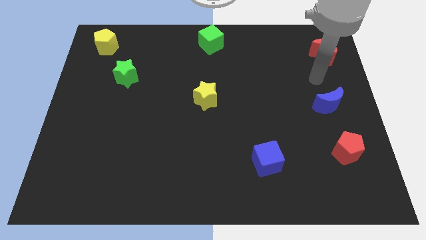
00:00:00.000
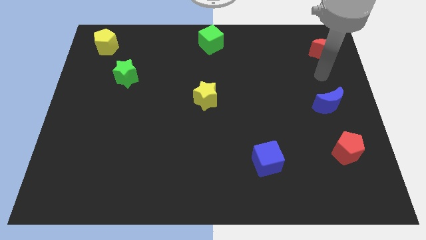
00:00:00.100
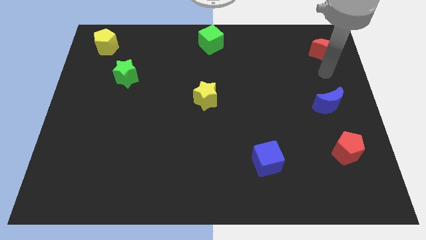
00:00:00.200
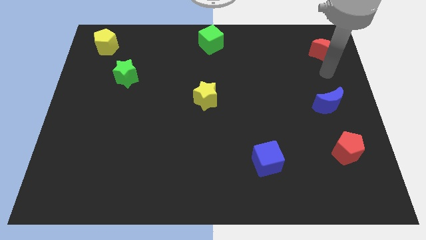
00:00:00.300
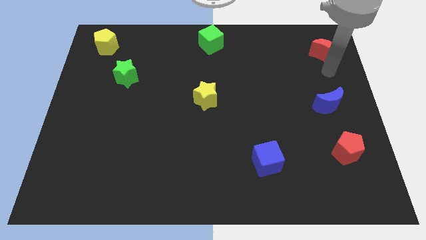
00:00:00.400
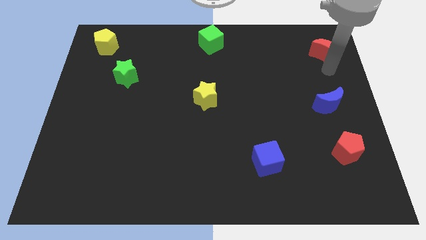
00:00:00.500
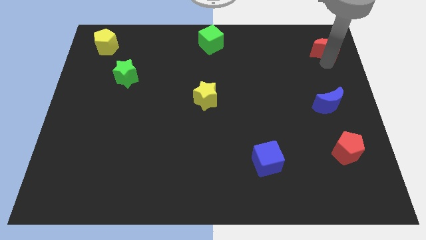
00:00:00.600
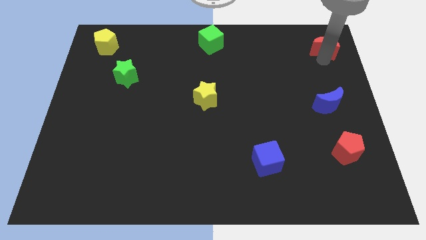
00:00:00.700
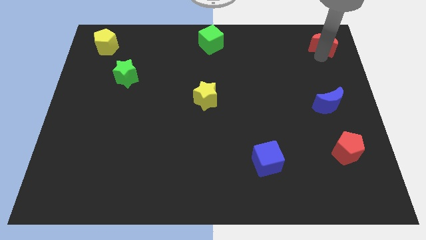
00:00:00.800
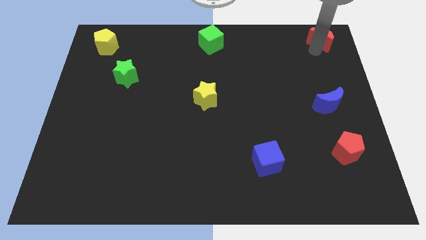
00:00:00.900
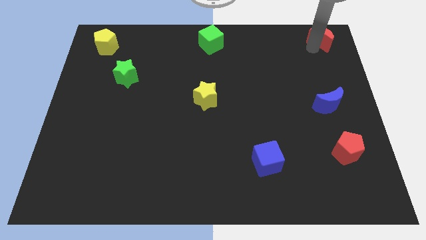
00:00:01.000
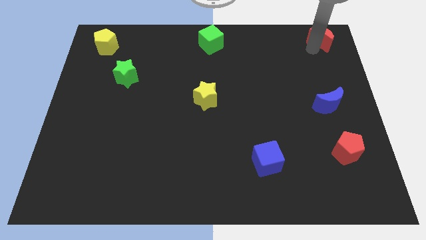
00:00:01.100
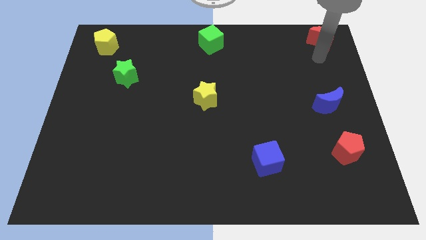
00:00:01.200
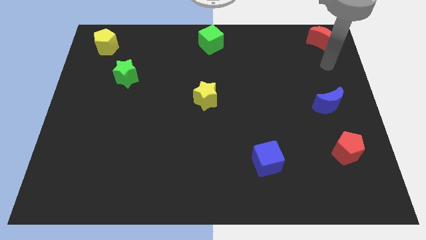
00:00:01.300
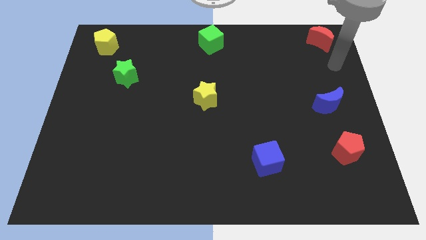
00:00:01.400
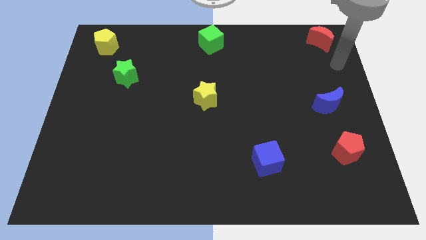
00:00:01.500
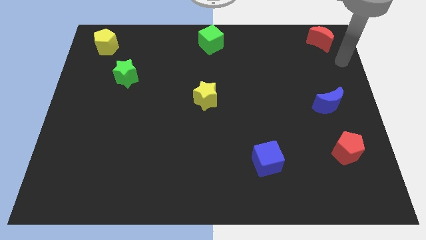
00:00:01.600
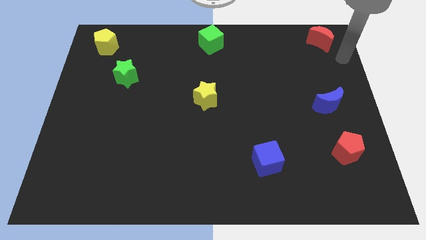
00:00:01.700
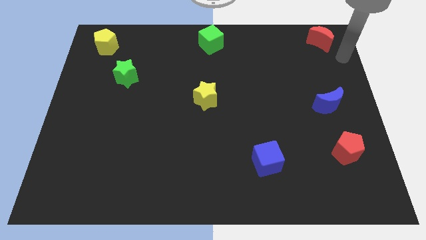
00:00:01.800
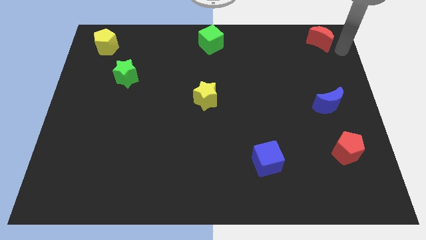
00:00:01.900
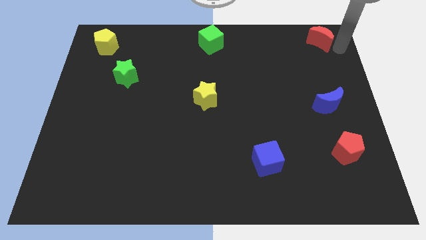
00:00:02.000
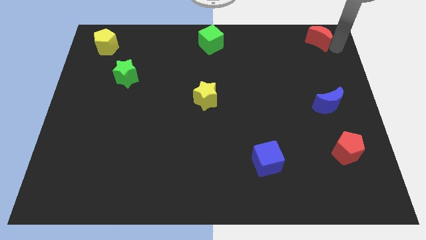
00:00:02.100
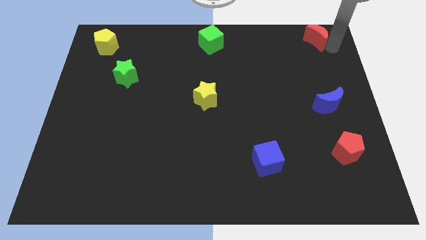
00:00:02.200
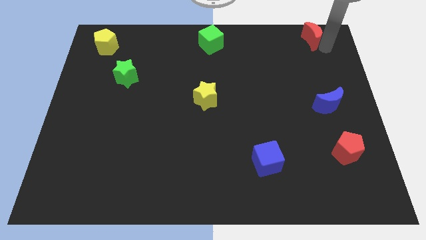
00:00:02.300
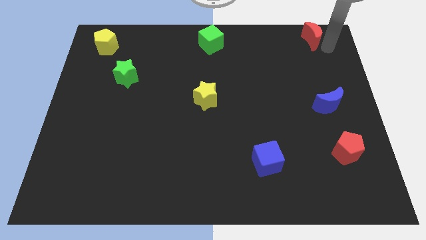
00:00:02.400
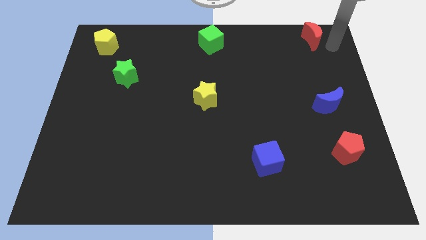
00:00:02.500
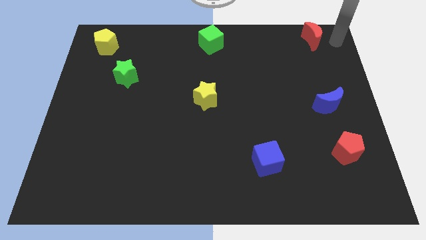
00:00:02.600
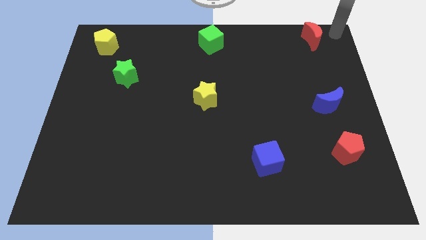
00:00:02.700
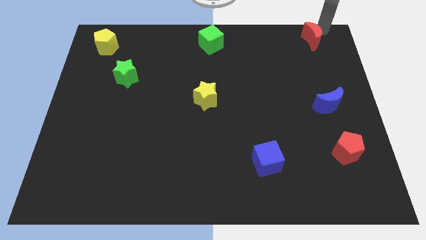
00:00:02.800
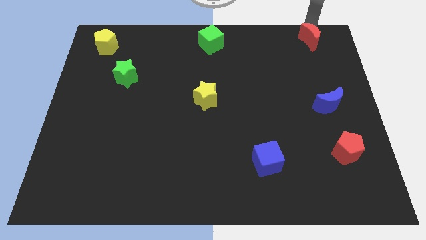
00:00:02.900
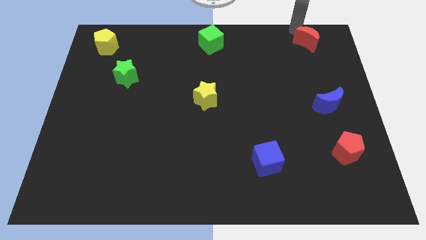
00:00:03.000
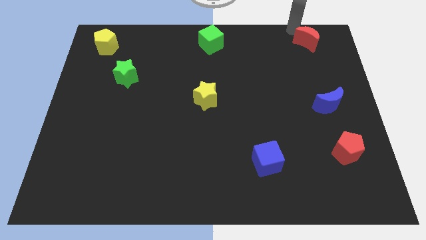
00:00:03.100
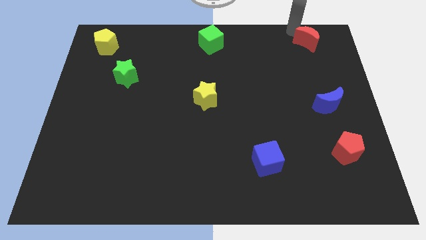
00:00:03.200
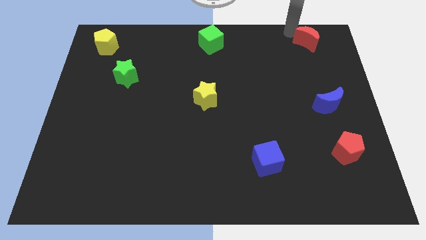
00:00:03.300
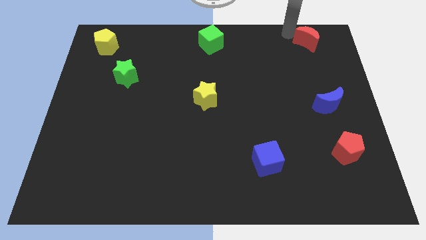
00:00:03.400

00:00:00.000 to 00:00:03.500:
place the red moon towards the top right of the board

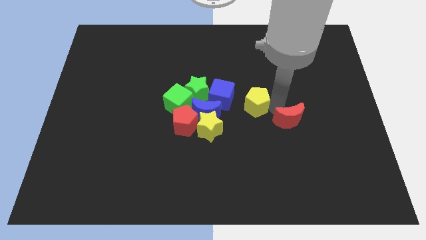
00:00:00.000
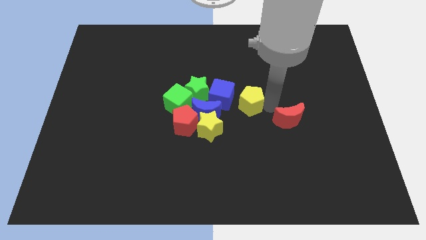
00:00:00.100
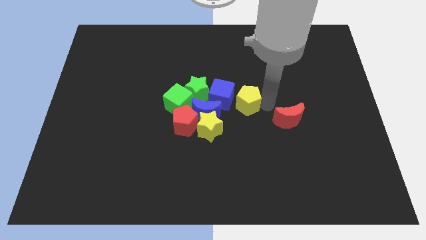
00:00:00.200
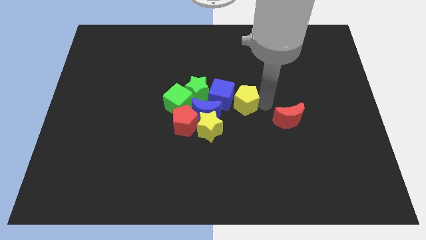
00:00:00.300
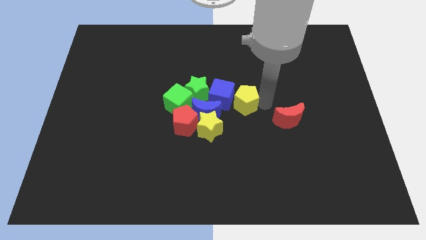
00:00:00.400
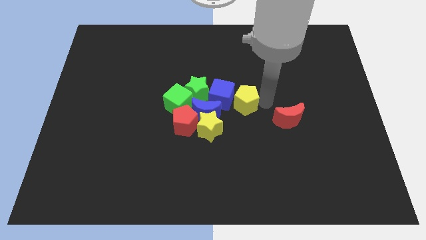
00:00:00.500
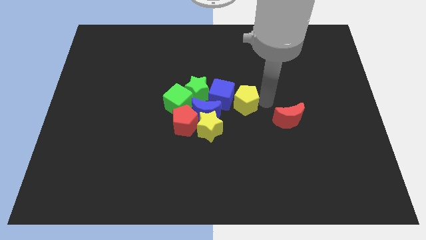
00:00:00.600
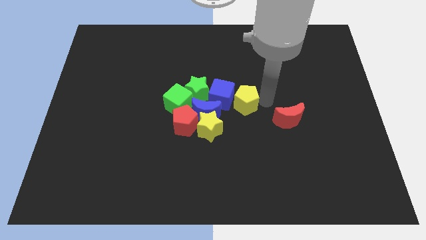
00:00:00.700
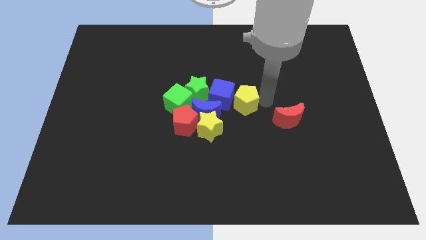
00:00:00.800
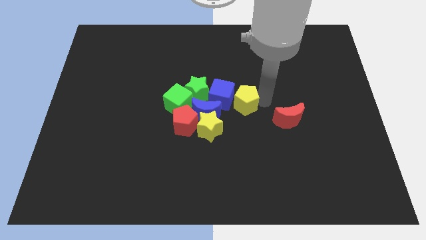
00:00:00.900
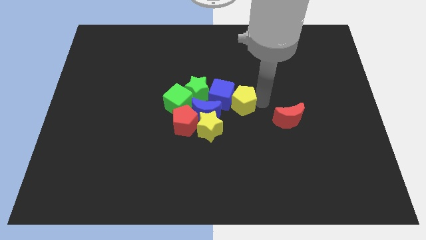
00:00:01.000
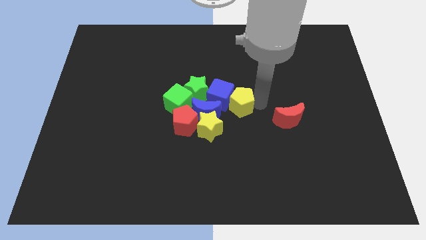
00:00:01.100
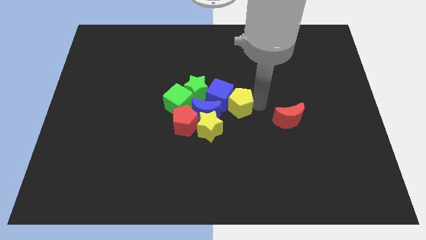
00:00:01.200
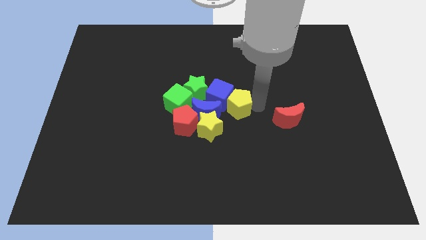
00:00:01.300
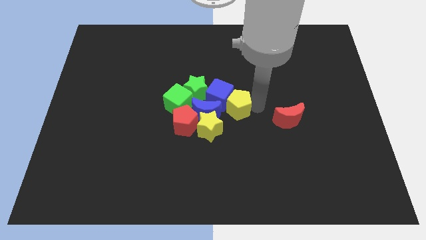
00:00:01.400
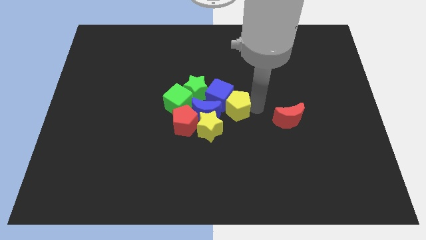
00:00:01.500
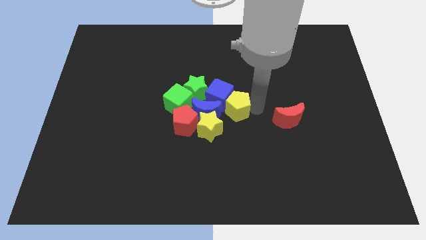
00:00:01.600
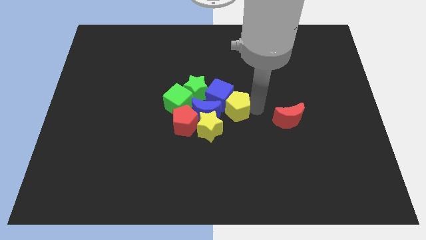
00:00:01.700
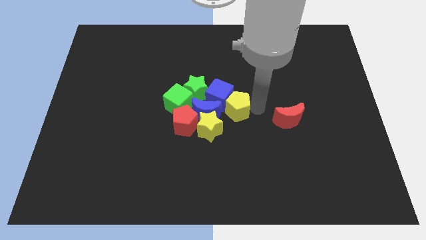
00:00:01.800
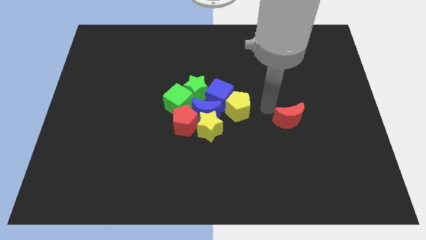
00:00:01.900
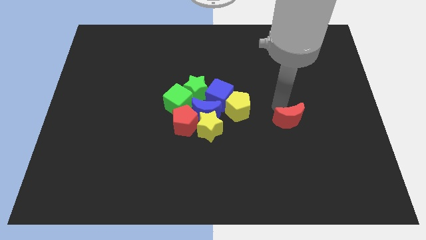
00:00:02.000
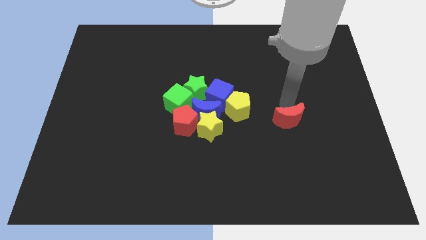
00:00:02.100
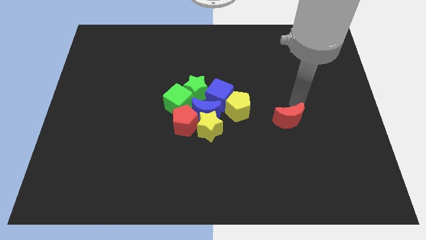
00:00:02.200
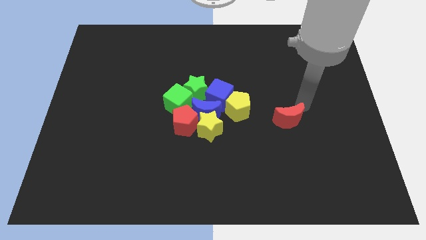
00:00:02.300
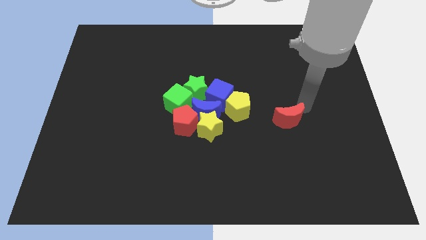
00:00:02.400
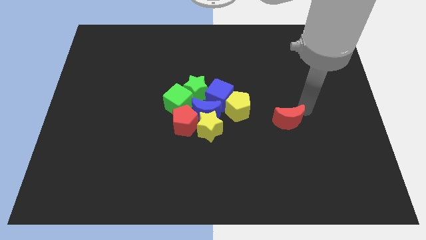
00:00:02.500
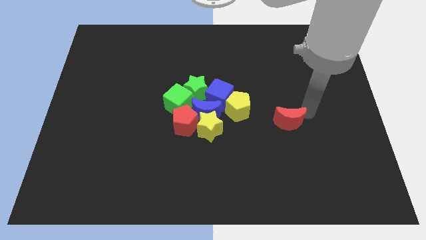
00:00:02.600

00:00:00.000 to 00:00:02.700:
move the yellow pentagon into the right of the blue cube

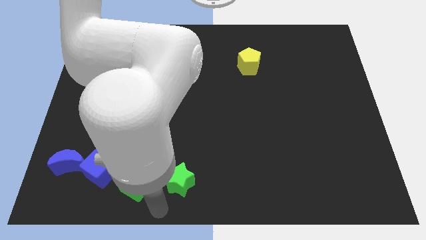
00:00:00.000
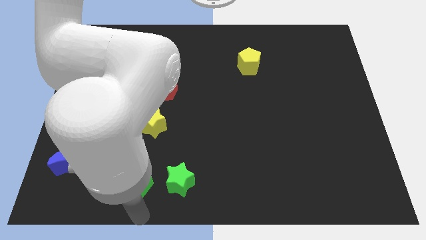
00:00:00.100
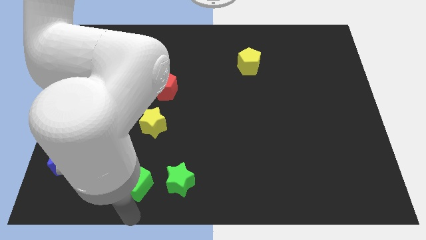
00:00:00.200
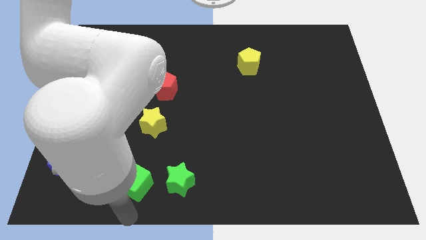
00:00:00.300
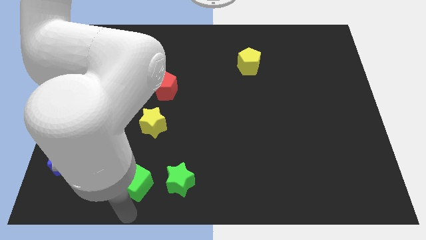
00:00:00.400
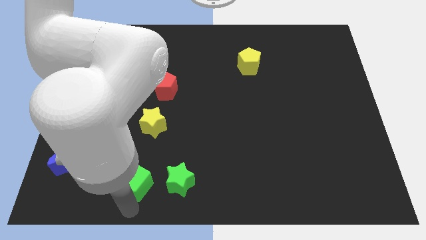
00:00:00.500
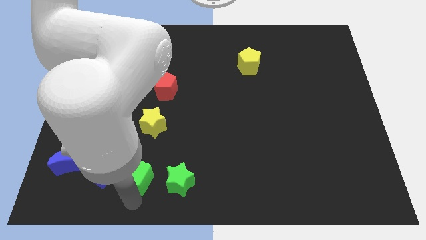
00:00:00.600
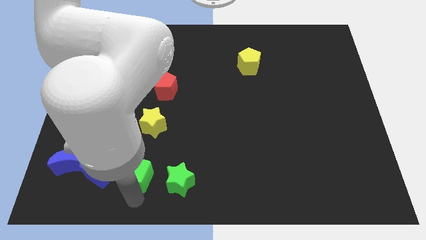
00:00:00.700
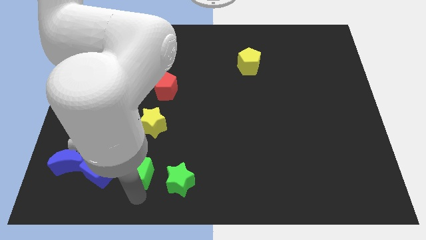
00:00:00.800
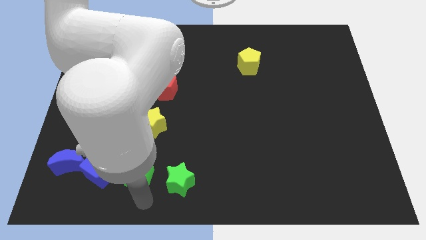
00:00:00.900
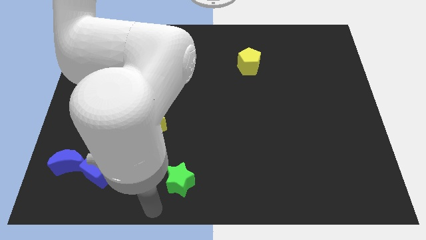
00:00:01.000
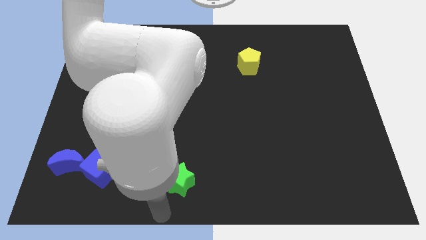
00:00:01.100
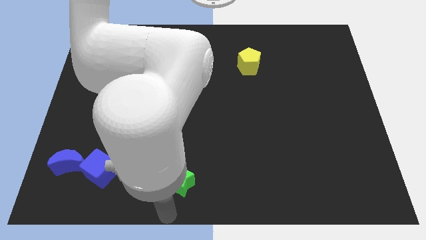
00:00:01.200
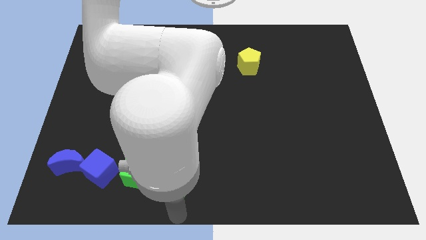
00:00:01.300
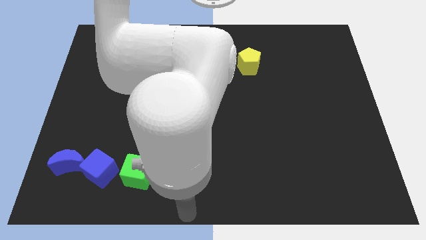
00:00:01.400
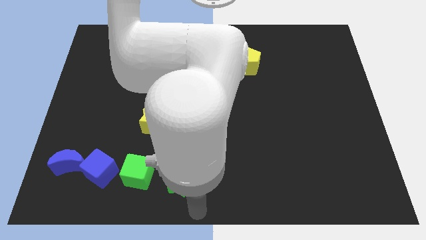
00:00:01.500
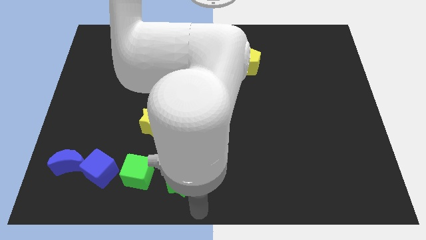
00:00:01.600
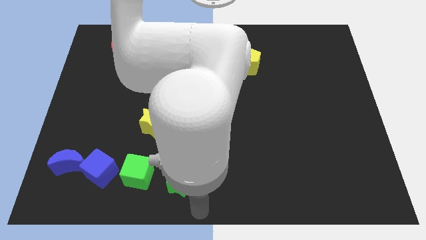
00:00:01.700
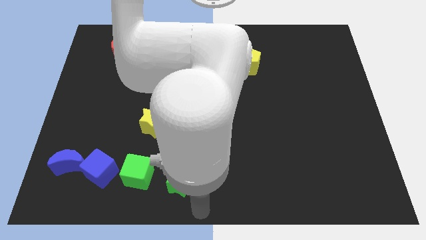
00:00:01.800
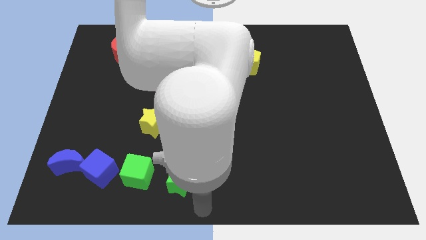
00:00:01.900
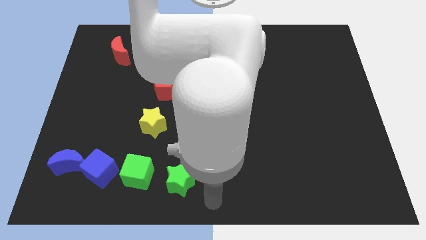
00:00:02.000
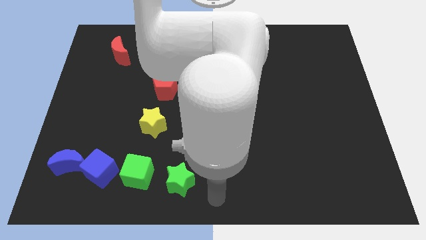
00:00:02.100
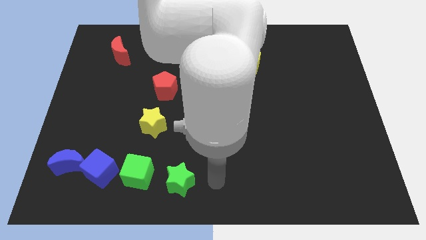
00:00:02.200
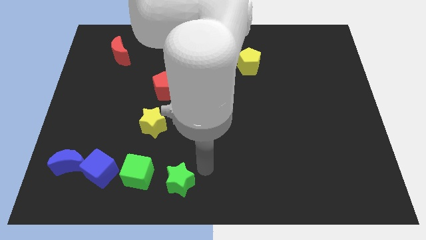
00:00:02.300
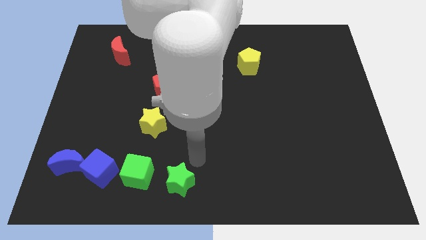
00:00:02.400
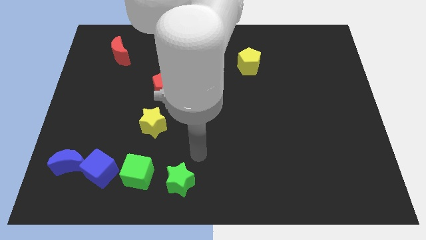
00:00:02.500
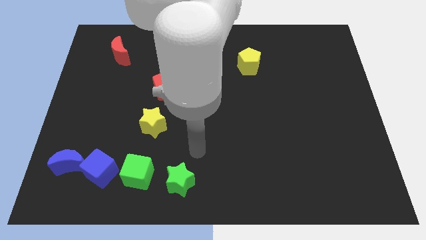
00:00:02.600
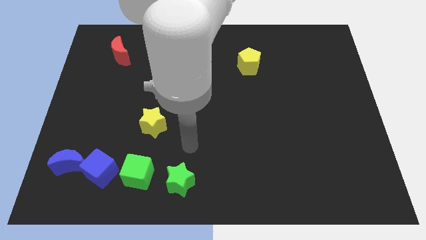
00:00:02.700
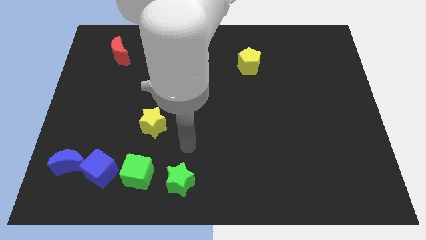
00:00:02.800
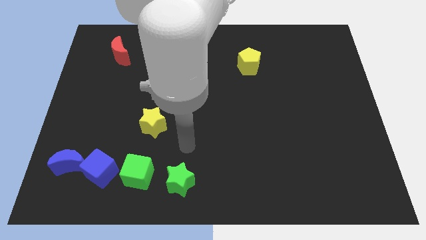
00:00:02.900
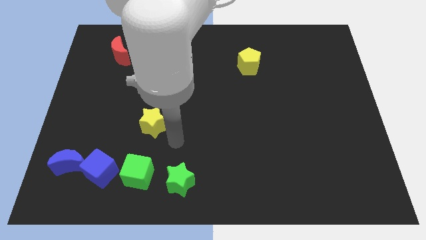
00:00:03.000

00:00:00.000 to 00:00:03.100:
adjust the green cube into the horizontal line of blocks
